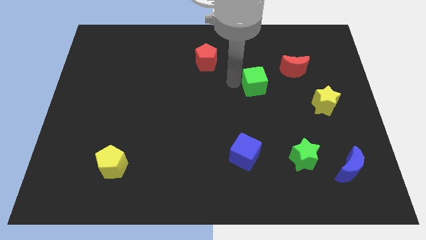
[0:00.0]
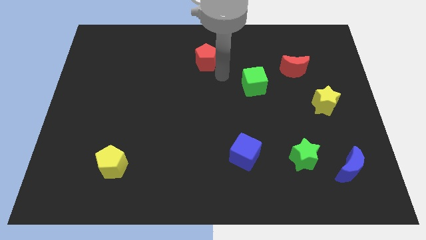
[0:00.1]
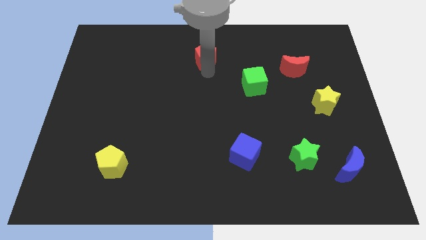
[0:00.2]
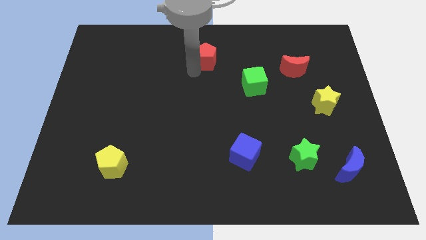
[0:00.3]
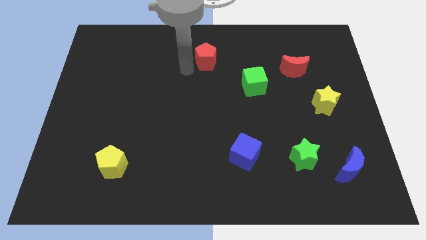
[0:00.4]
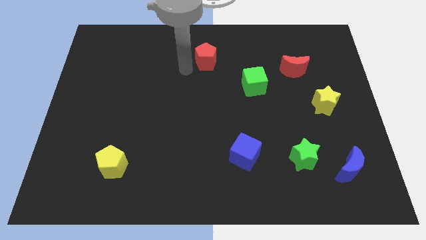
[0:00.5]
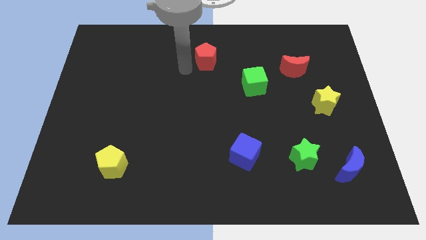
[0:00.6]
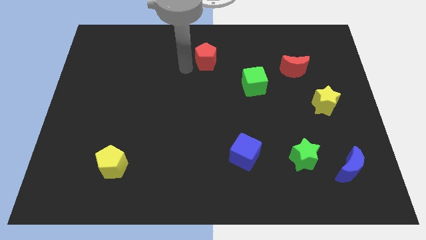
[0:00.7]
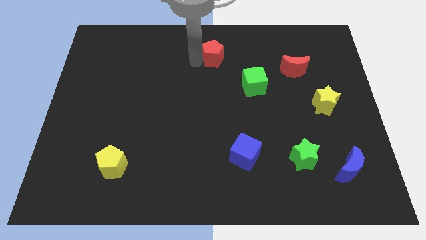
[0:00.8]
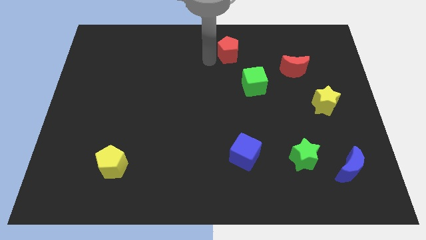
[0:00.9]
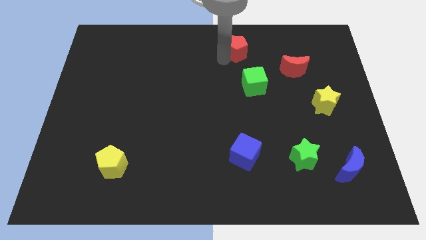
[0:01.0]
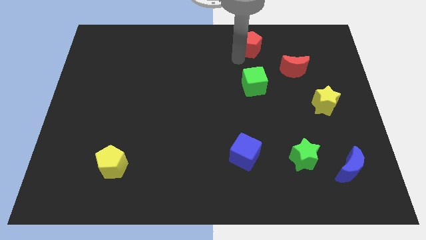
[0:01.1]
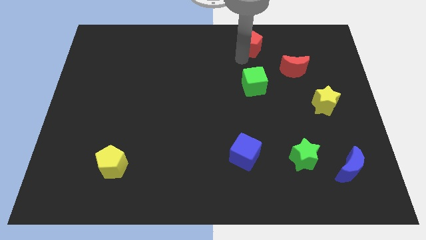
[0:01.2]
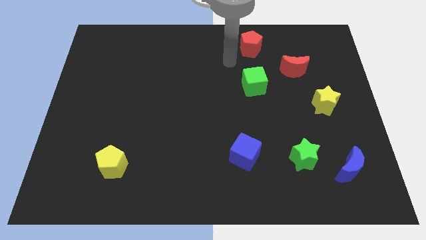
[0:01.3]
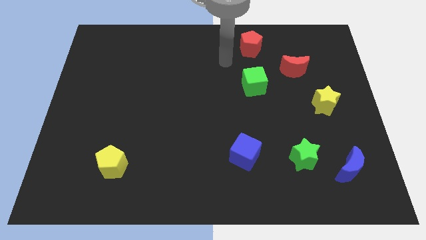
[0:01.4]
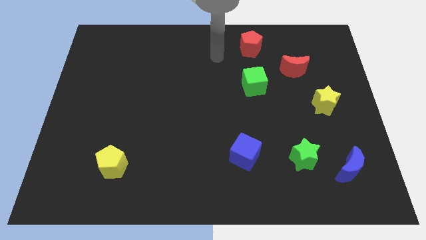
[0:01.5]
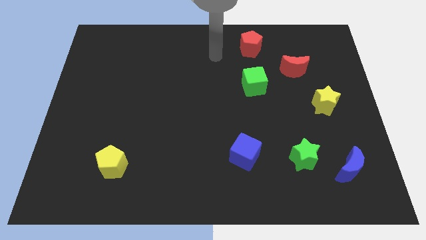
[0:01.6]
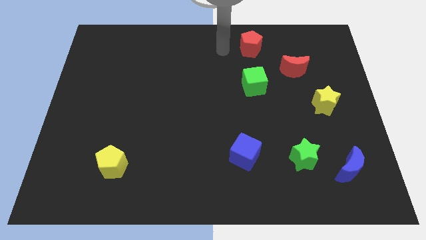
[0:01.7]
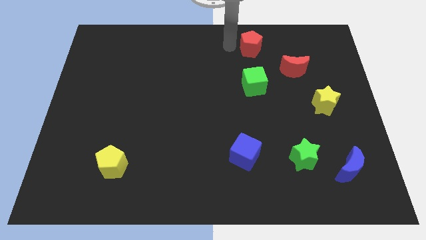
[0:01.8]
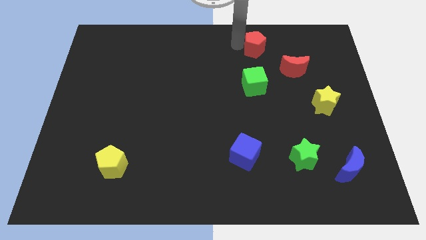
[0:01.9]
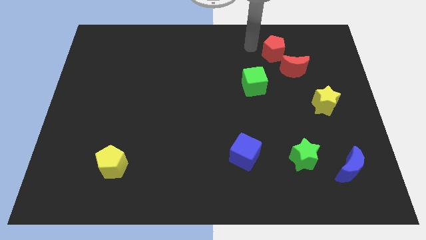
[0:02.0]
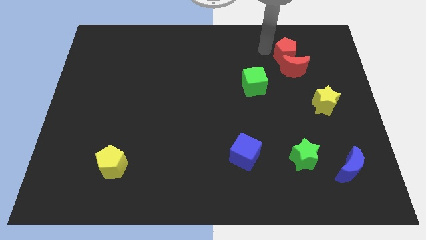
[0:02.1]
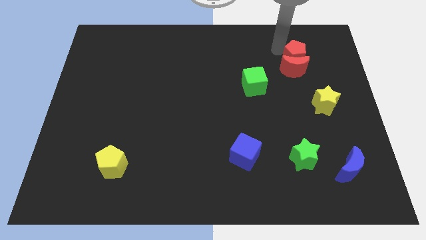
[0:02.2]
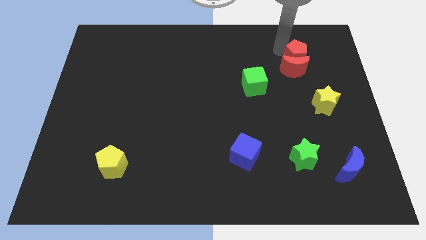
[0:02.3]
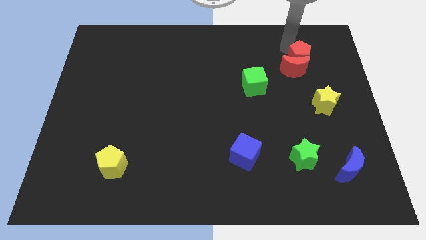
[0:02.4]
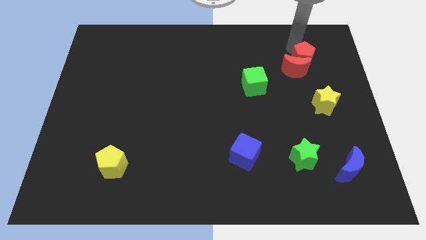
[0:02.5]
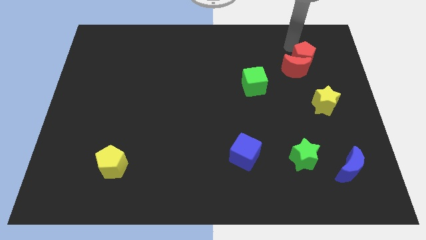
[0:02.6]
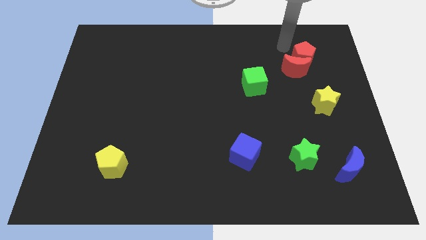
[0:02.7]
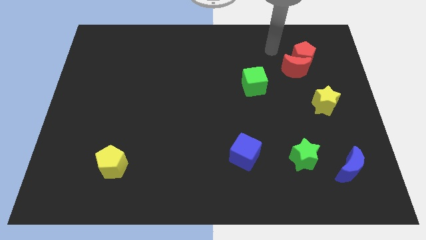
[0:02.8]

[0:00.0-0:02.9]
push the red pentagon into red moon

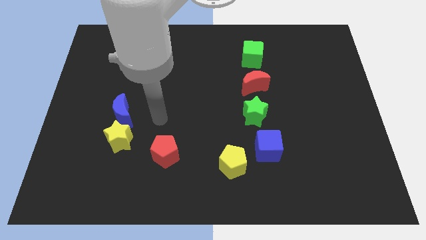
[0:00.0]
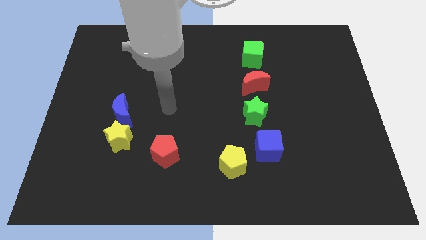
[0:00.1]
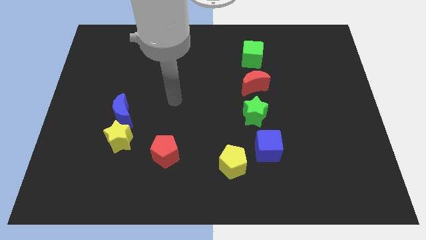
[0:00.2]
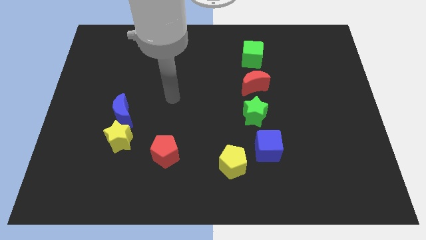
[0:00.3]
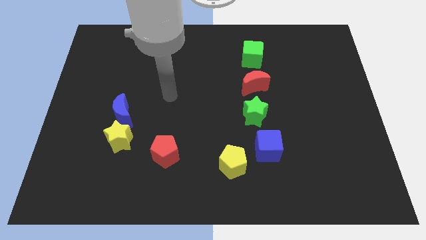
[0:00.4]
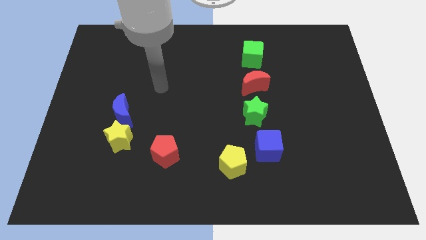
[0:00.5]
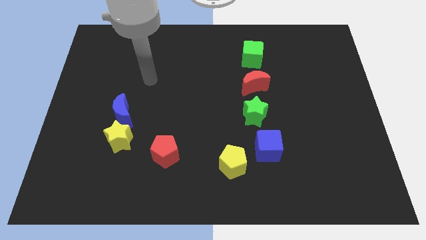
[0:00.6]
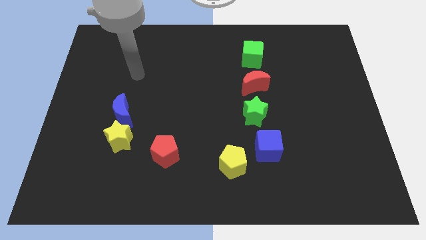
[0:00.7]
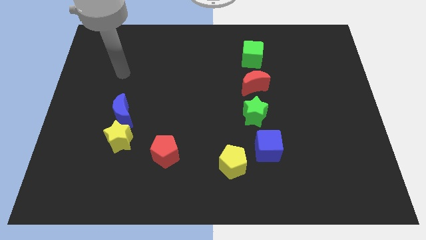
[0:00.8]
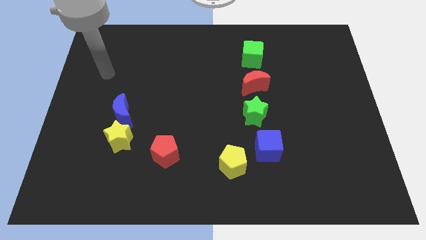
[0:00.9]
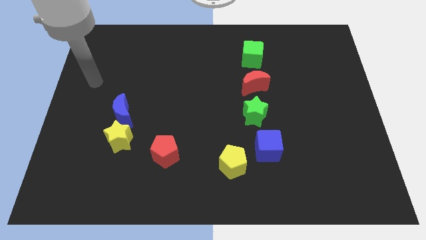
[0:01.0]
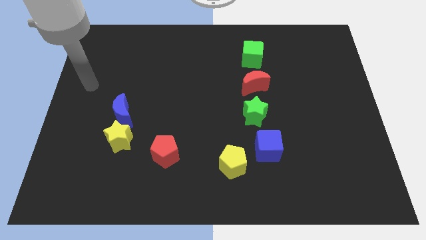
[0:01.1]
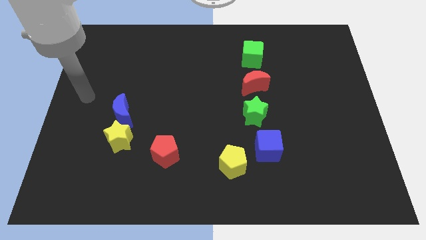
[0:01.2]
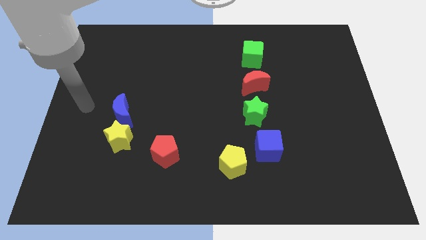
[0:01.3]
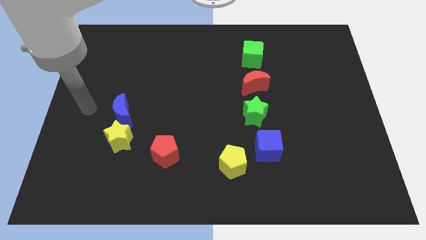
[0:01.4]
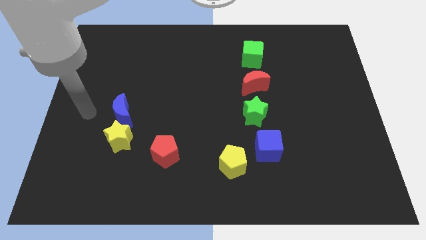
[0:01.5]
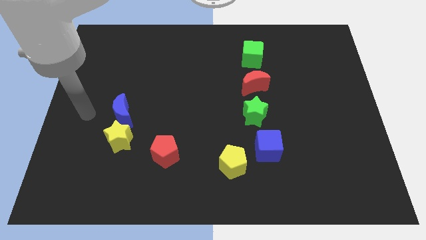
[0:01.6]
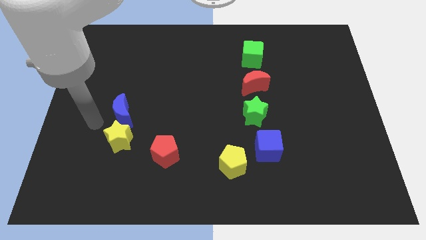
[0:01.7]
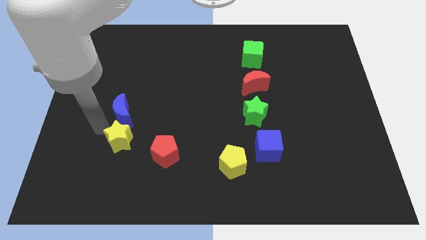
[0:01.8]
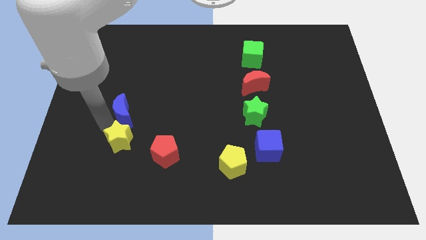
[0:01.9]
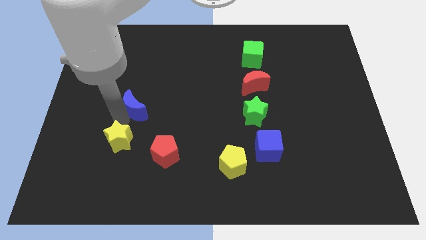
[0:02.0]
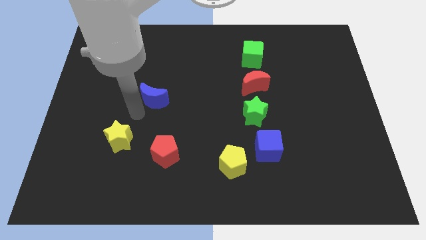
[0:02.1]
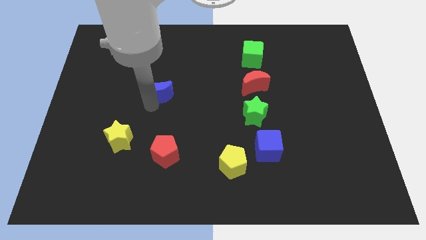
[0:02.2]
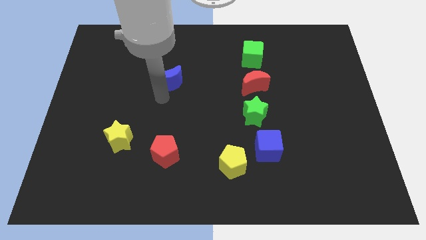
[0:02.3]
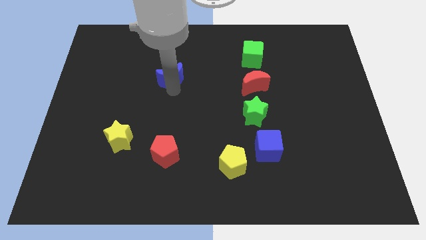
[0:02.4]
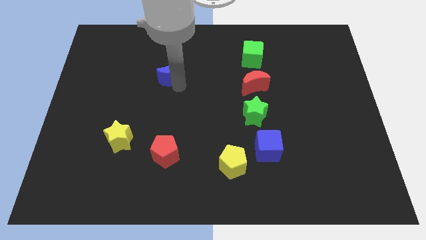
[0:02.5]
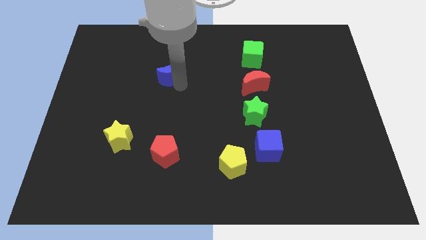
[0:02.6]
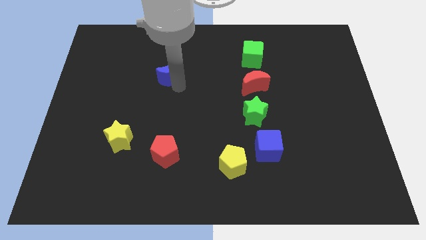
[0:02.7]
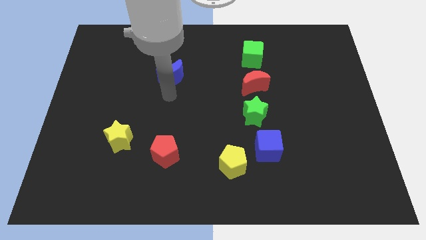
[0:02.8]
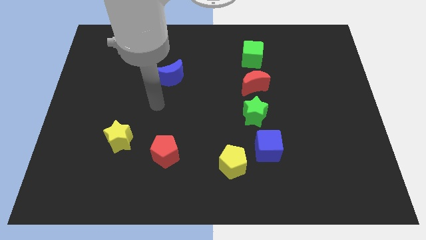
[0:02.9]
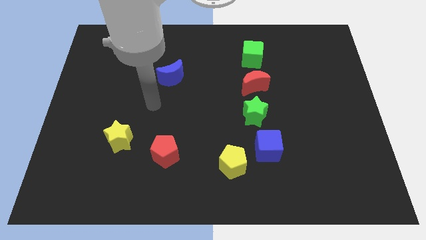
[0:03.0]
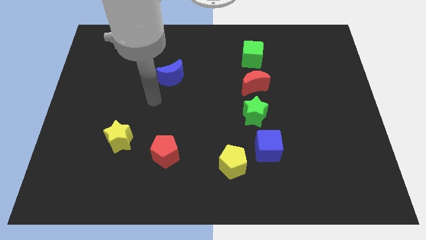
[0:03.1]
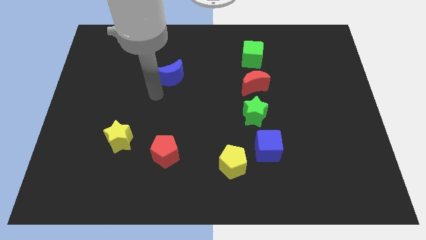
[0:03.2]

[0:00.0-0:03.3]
place the blue crescent vertically above the top side of the red pentagon

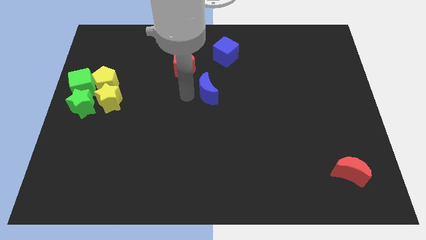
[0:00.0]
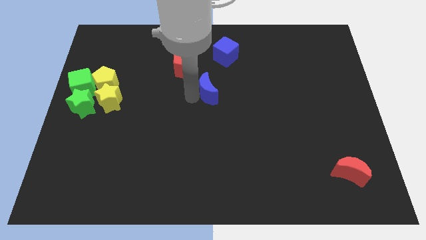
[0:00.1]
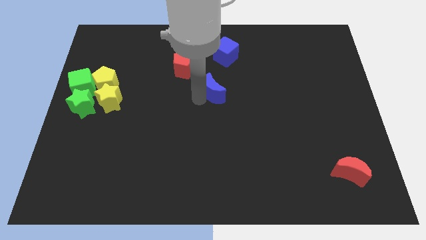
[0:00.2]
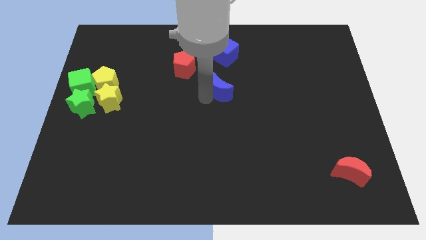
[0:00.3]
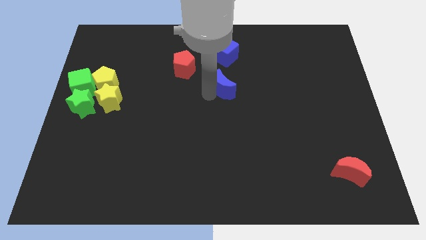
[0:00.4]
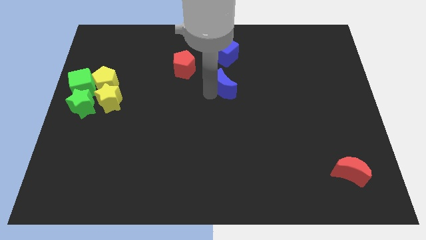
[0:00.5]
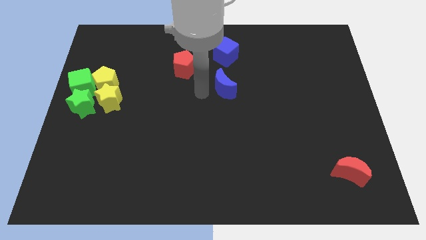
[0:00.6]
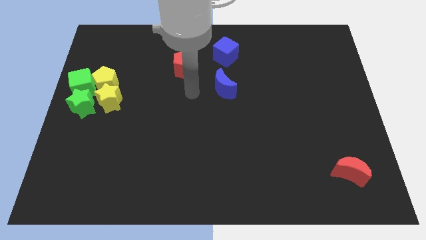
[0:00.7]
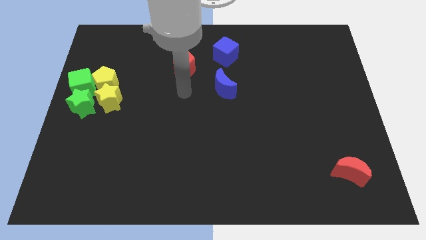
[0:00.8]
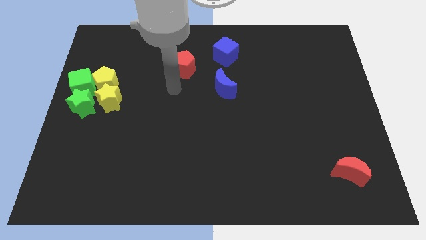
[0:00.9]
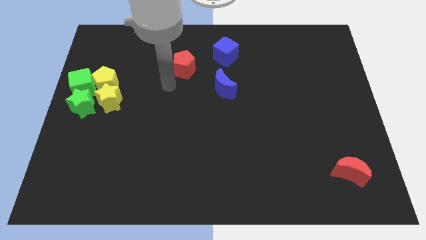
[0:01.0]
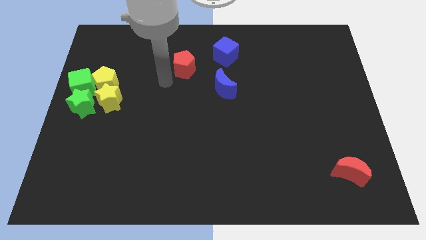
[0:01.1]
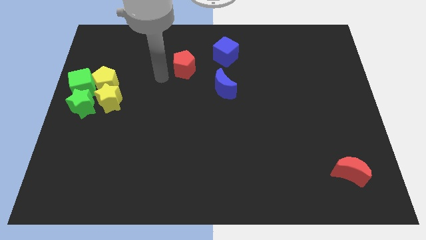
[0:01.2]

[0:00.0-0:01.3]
push the blue moon below the blue cube

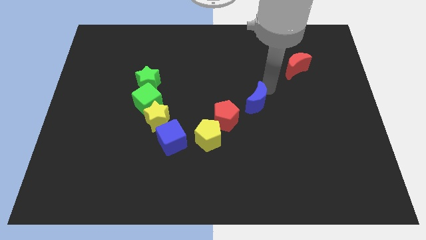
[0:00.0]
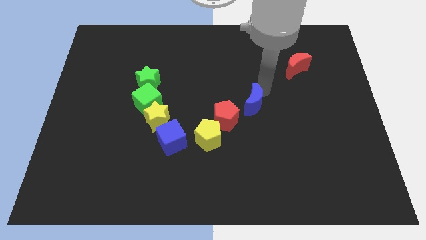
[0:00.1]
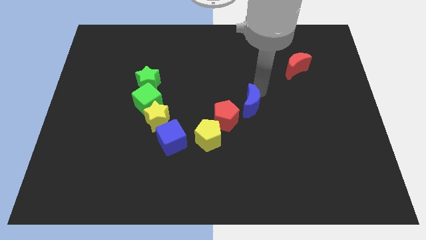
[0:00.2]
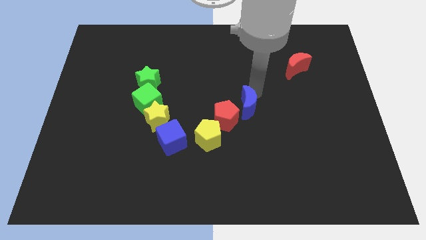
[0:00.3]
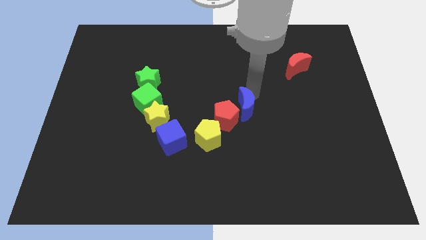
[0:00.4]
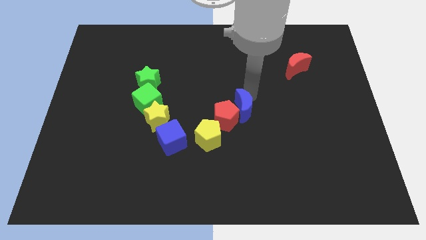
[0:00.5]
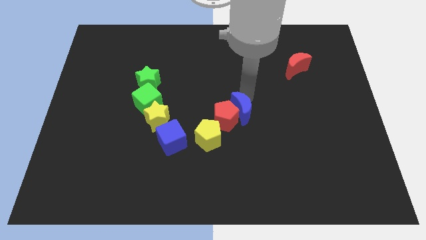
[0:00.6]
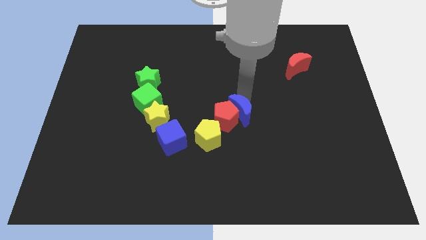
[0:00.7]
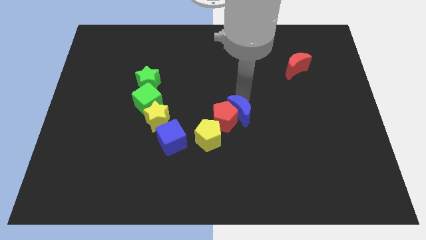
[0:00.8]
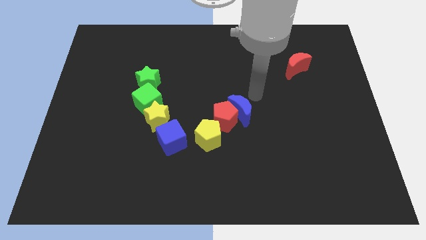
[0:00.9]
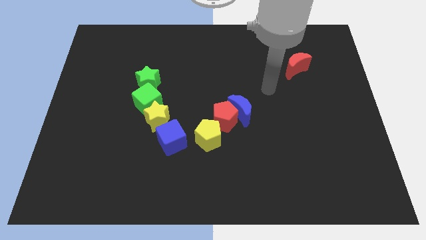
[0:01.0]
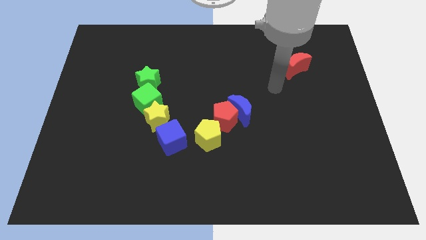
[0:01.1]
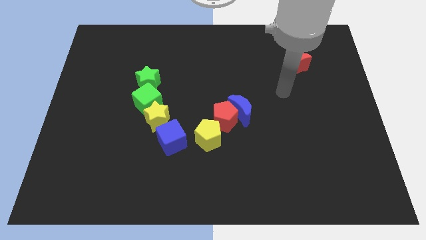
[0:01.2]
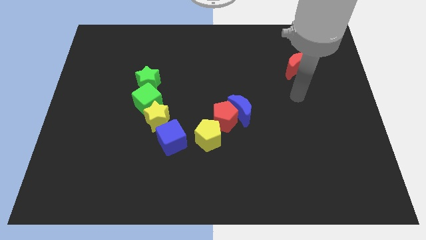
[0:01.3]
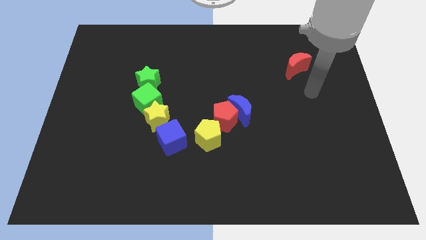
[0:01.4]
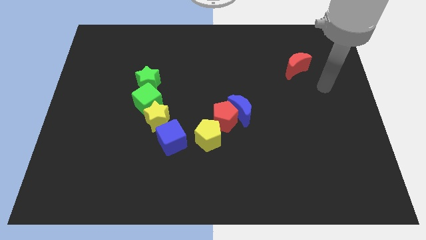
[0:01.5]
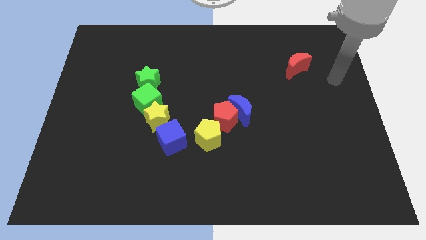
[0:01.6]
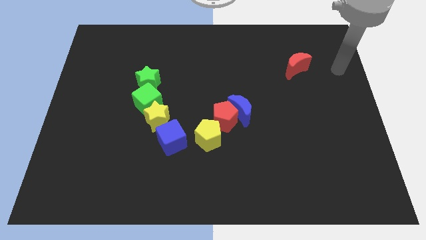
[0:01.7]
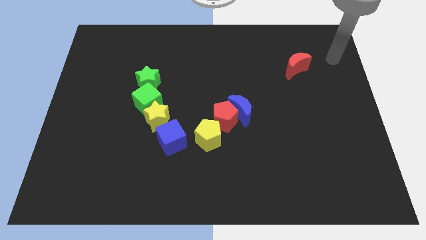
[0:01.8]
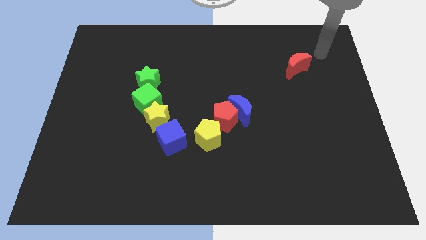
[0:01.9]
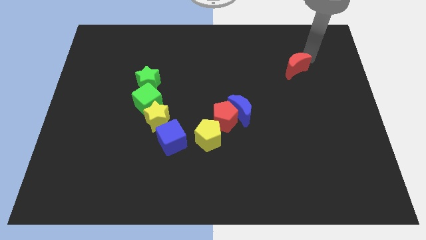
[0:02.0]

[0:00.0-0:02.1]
place the blue crescent close to red pentagon
